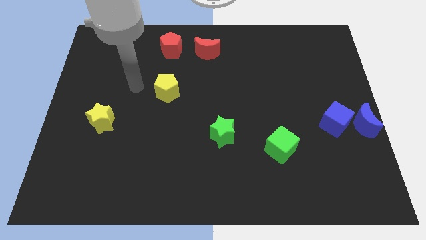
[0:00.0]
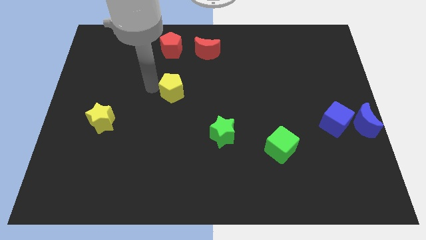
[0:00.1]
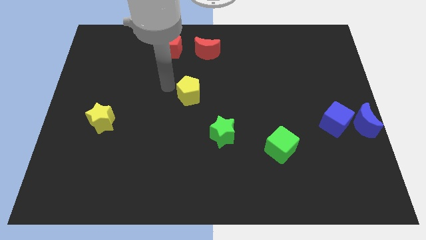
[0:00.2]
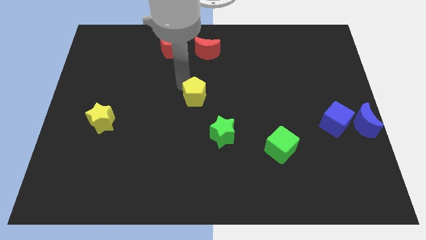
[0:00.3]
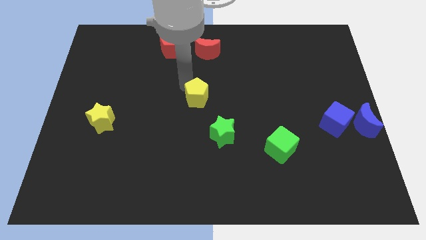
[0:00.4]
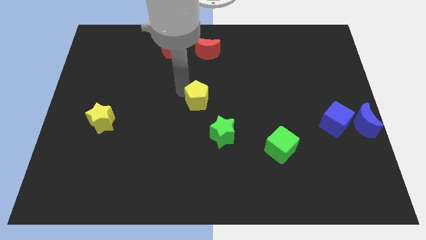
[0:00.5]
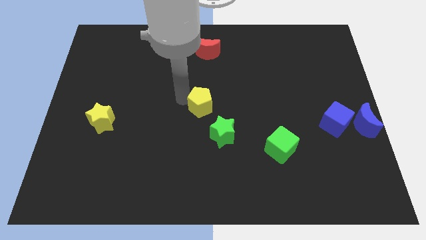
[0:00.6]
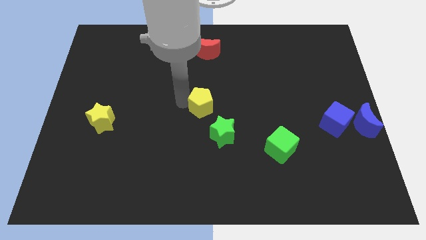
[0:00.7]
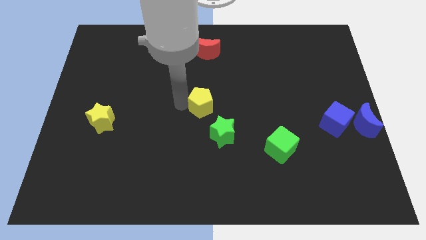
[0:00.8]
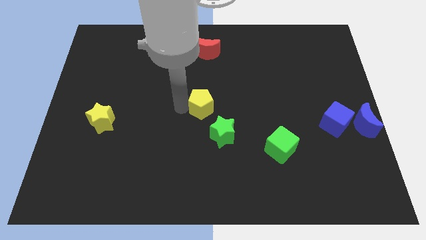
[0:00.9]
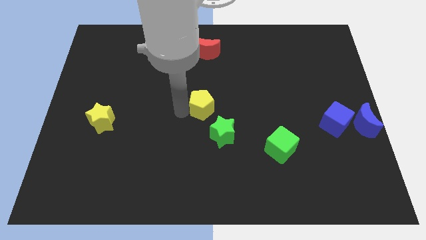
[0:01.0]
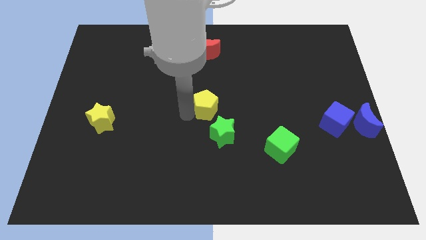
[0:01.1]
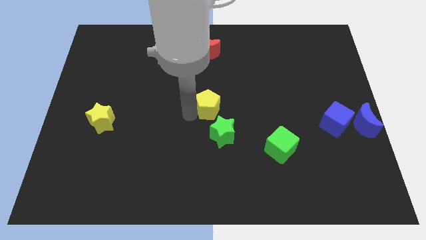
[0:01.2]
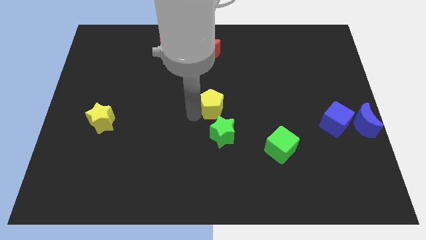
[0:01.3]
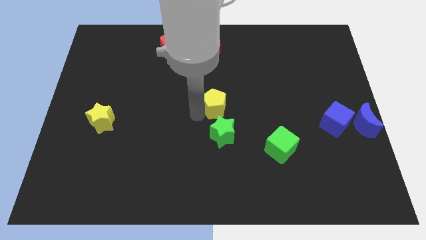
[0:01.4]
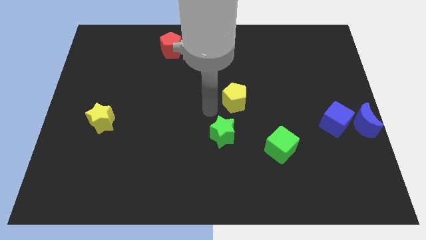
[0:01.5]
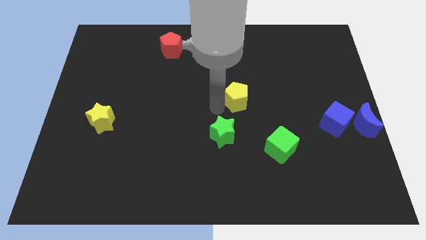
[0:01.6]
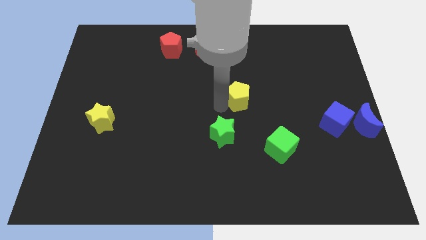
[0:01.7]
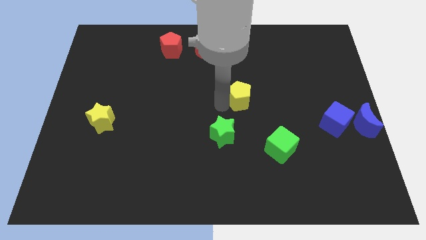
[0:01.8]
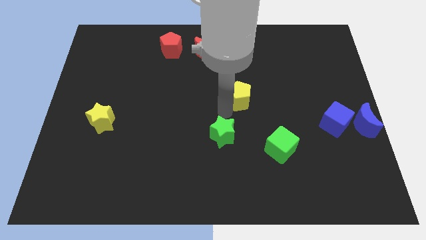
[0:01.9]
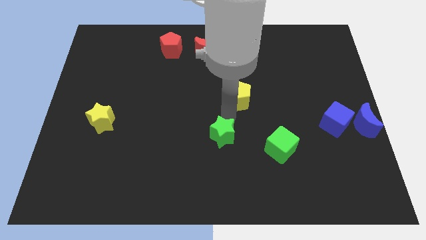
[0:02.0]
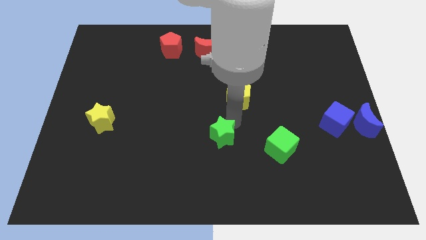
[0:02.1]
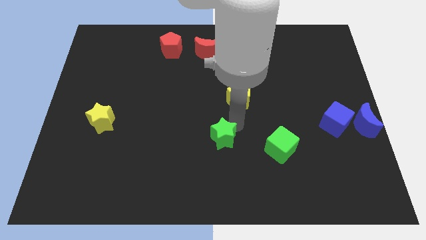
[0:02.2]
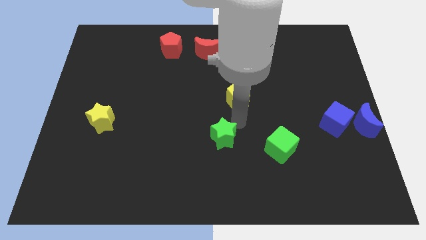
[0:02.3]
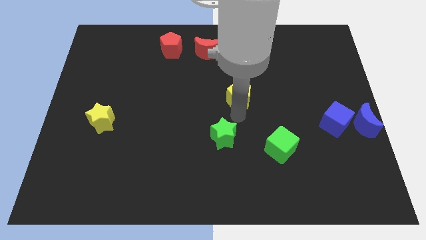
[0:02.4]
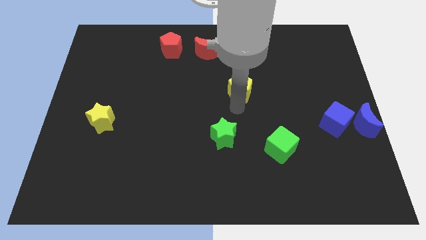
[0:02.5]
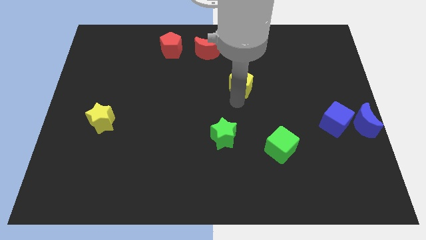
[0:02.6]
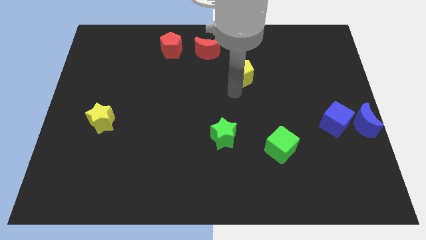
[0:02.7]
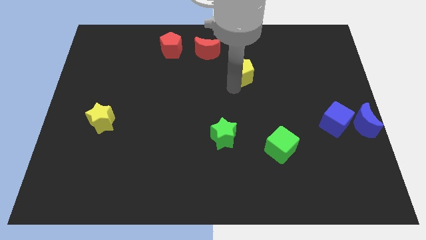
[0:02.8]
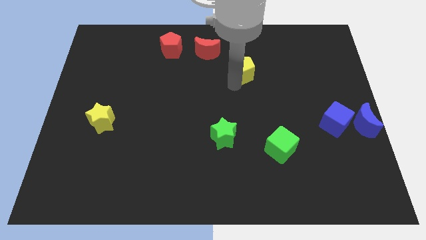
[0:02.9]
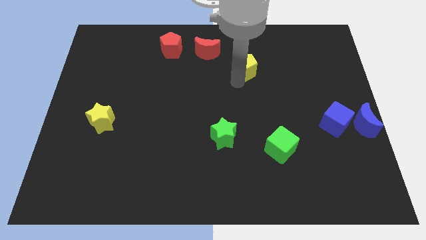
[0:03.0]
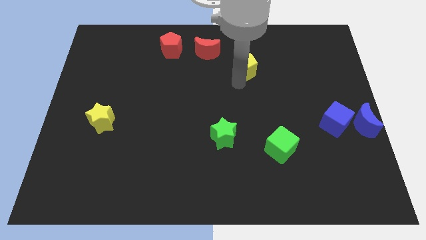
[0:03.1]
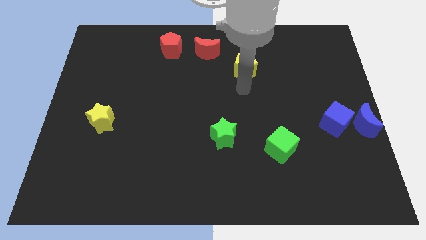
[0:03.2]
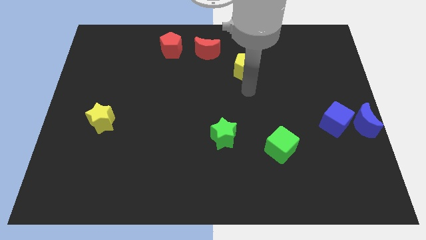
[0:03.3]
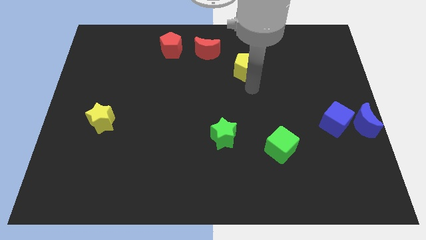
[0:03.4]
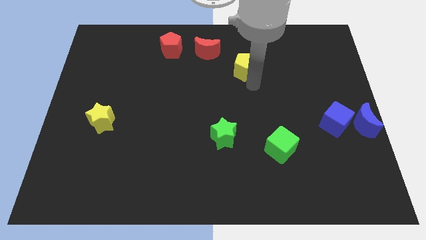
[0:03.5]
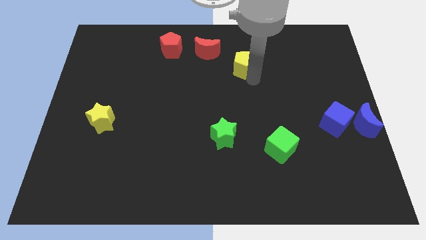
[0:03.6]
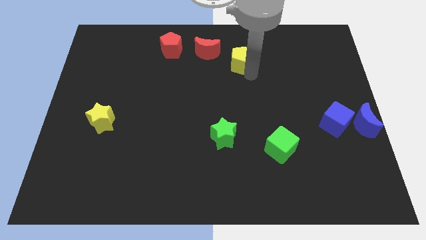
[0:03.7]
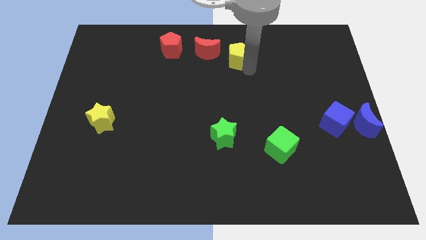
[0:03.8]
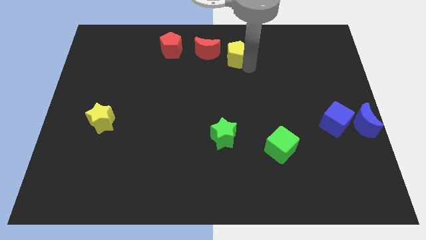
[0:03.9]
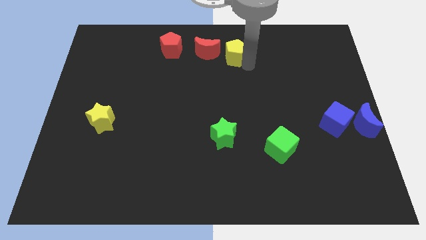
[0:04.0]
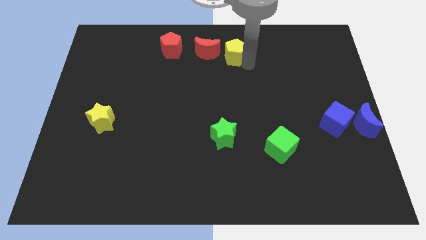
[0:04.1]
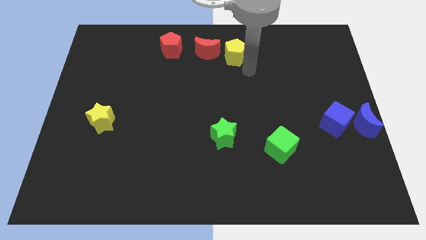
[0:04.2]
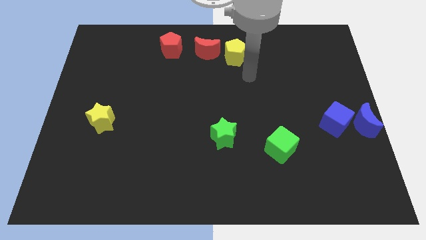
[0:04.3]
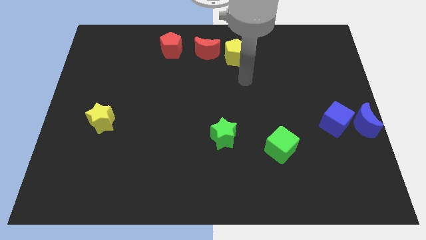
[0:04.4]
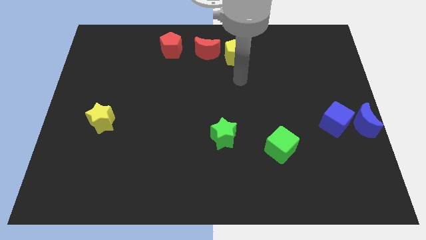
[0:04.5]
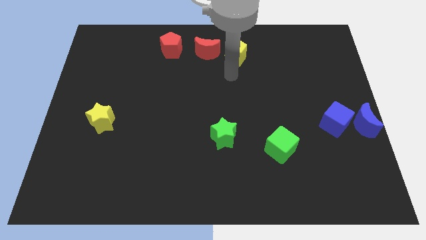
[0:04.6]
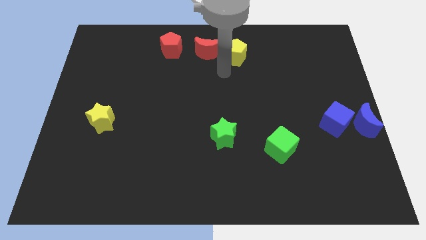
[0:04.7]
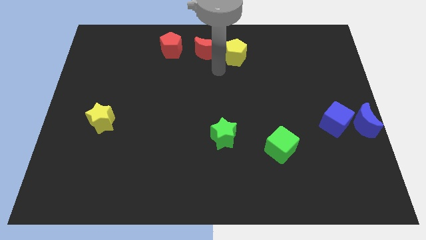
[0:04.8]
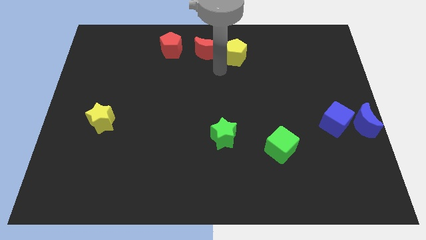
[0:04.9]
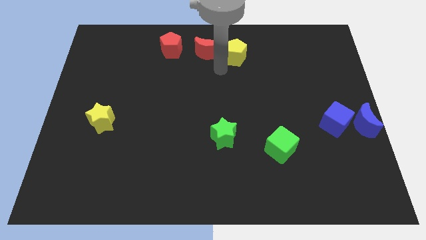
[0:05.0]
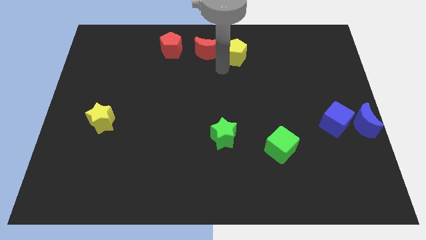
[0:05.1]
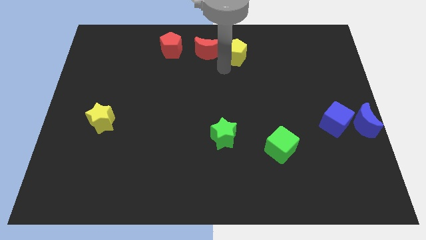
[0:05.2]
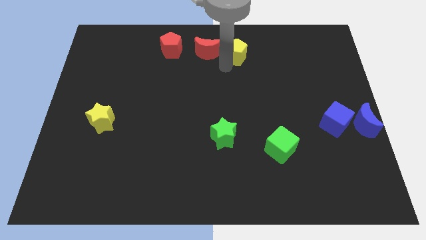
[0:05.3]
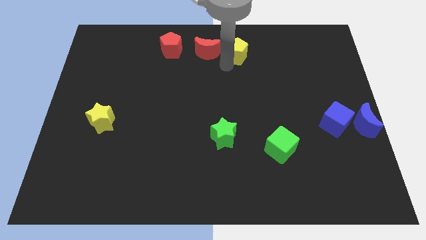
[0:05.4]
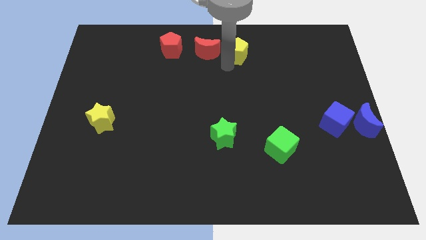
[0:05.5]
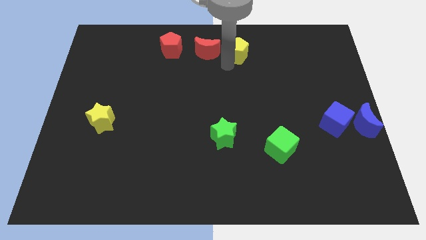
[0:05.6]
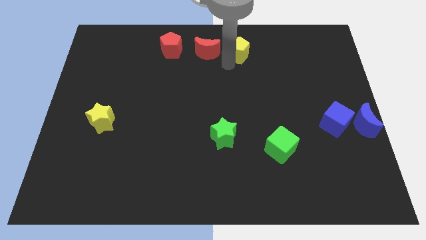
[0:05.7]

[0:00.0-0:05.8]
slide the yellow pentagon to the right side of the red moon

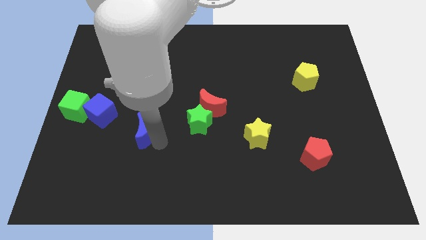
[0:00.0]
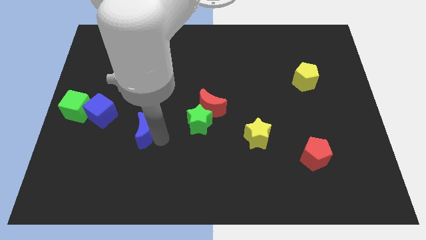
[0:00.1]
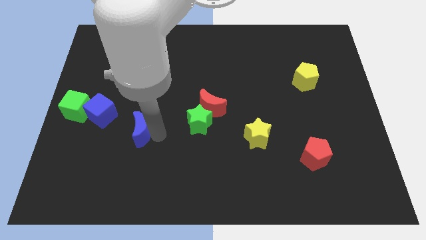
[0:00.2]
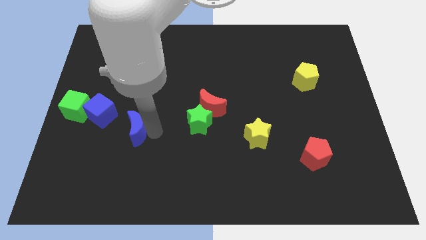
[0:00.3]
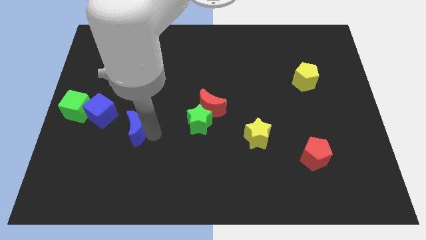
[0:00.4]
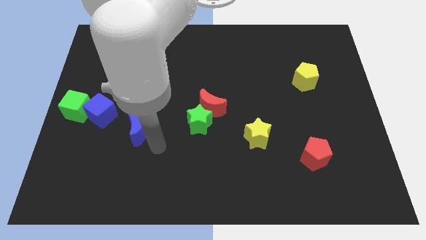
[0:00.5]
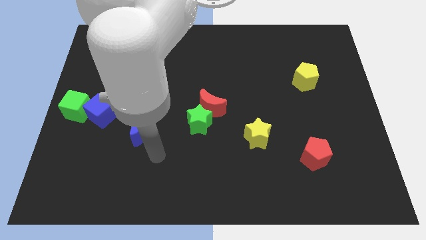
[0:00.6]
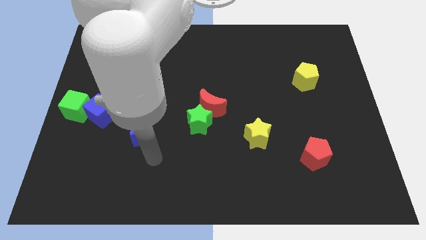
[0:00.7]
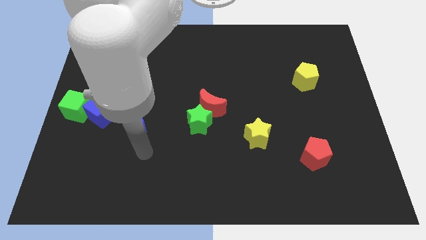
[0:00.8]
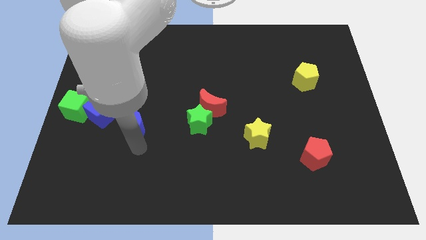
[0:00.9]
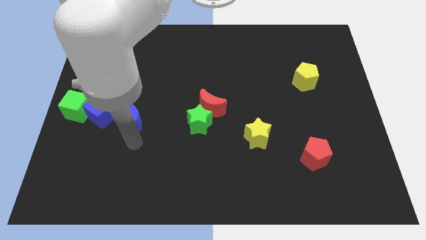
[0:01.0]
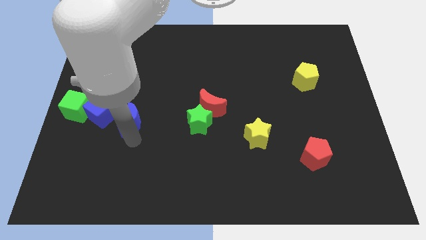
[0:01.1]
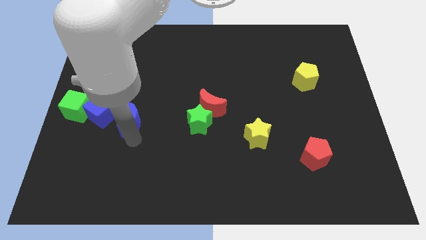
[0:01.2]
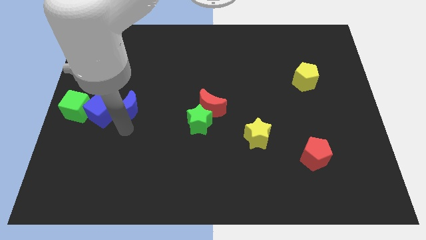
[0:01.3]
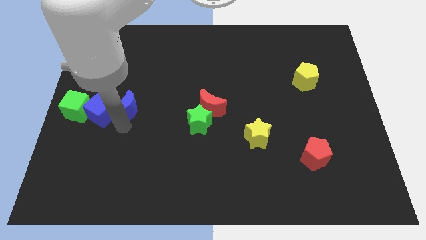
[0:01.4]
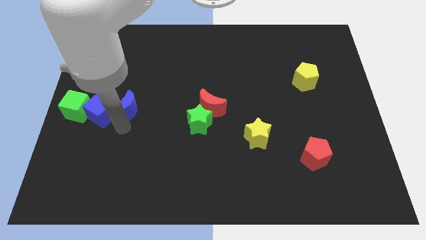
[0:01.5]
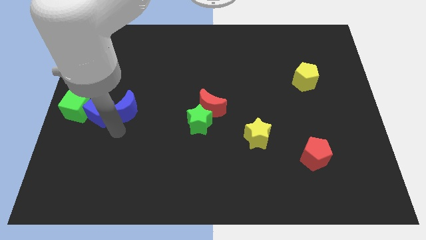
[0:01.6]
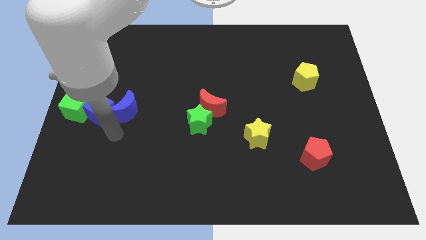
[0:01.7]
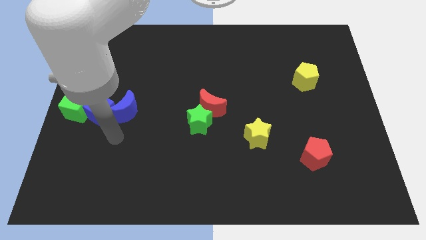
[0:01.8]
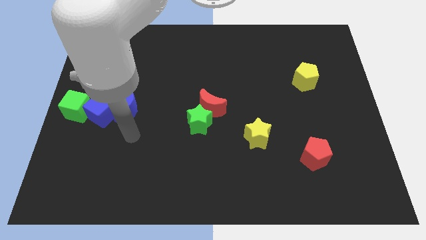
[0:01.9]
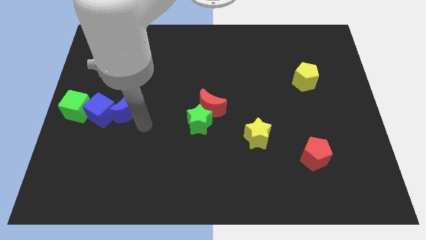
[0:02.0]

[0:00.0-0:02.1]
move the blue moon into the blue cube

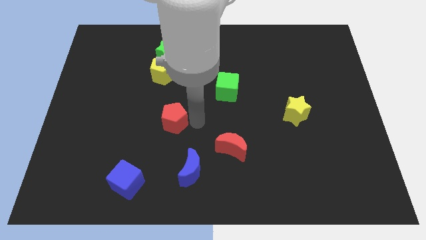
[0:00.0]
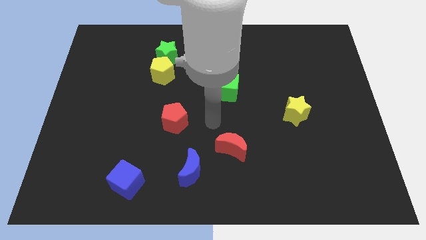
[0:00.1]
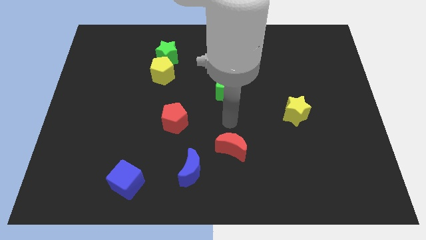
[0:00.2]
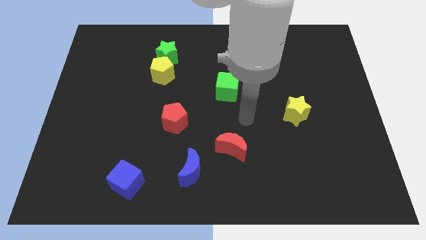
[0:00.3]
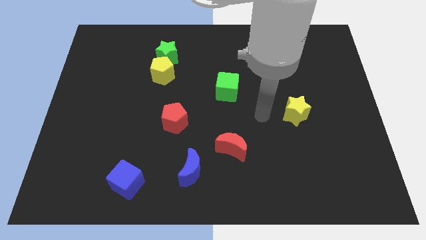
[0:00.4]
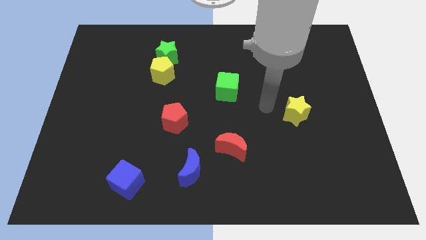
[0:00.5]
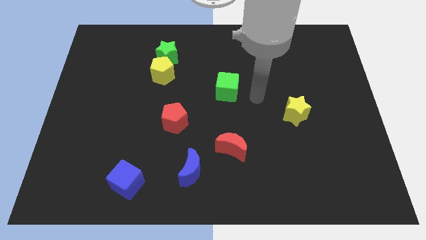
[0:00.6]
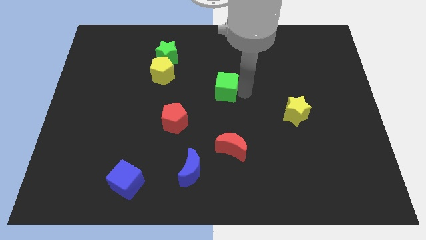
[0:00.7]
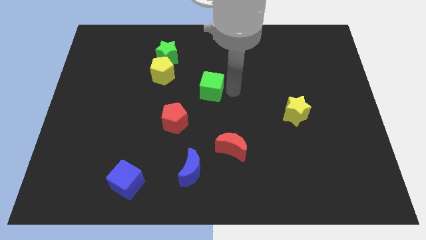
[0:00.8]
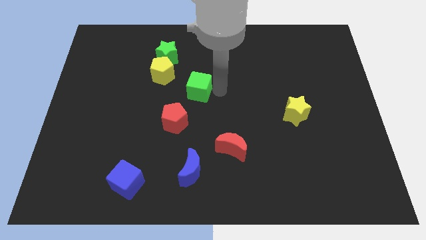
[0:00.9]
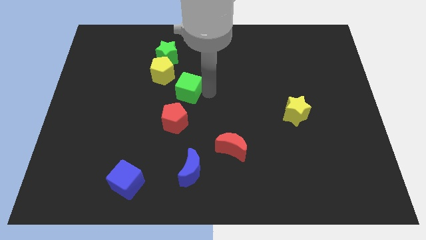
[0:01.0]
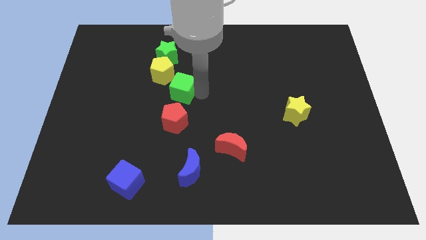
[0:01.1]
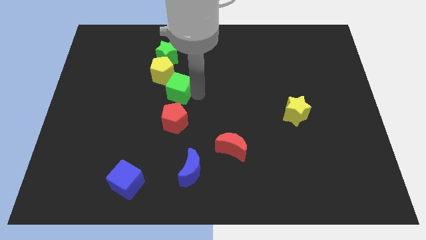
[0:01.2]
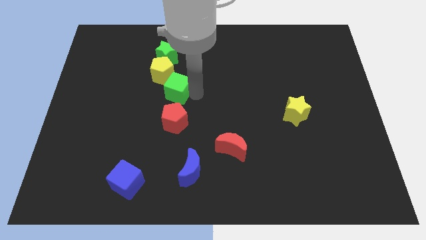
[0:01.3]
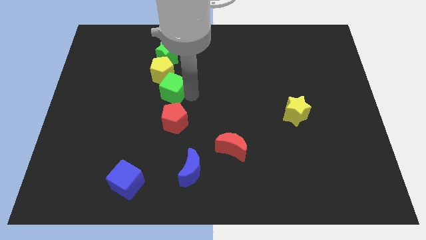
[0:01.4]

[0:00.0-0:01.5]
put the green cube vertically above the red pentagon
